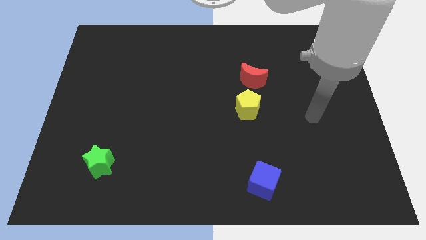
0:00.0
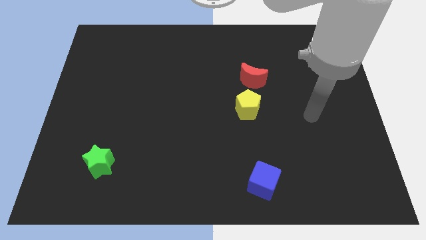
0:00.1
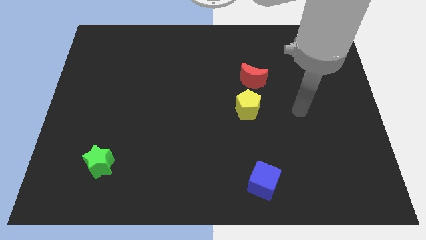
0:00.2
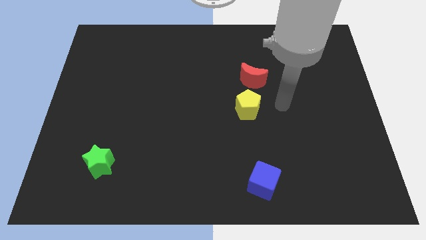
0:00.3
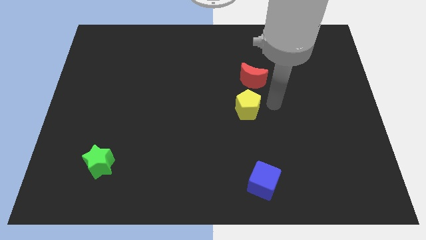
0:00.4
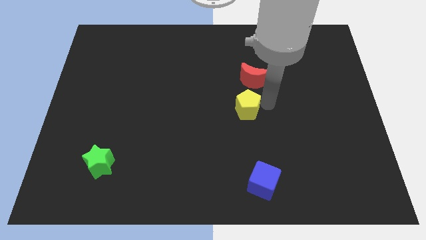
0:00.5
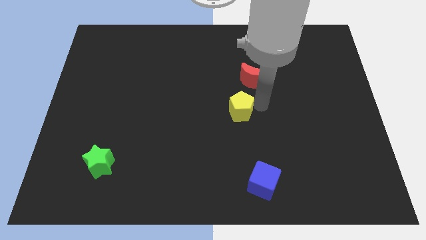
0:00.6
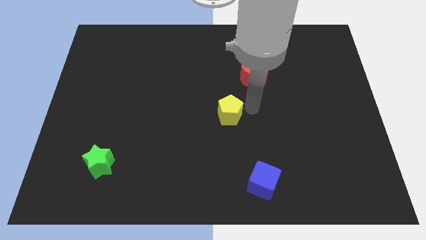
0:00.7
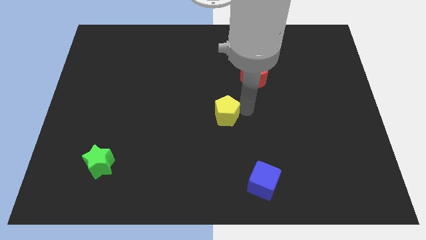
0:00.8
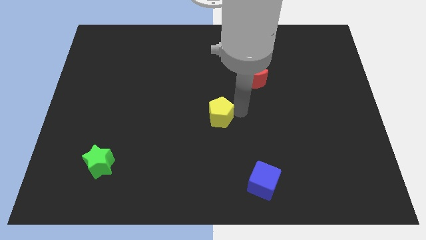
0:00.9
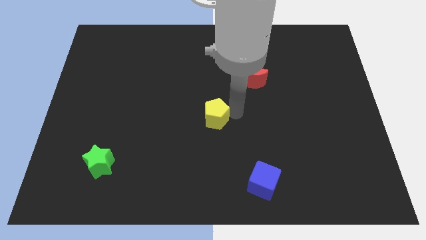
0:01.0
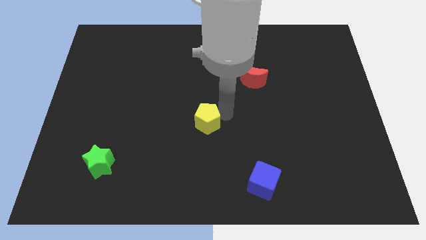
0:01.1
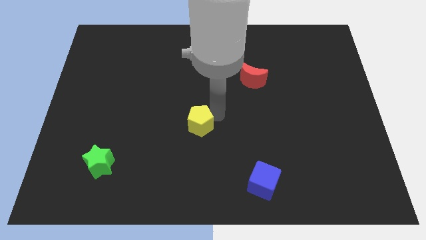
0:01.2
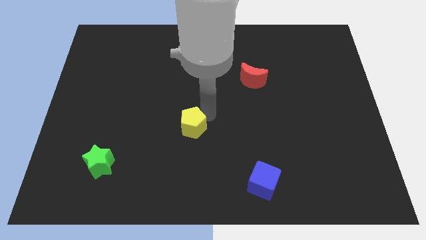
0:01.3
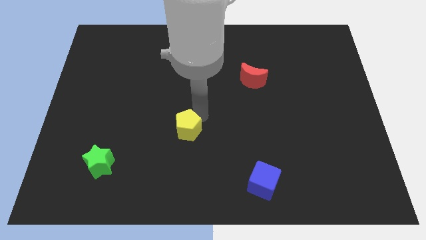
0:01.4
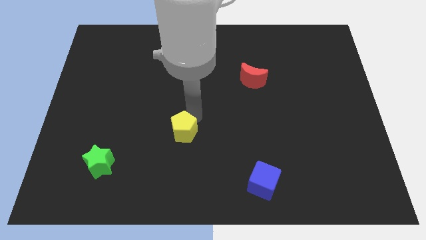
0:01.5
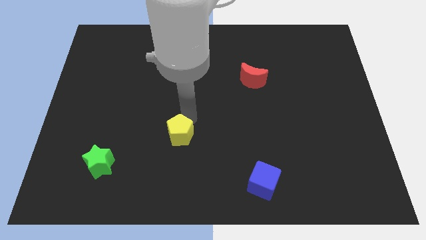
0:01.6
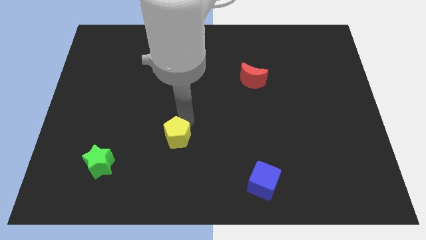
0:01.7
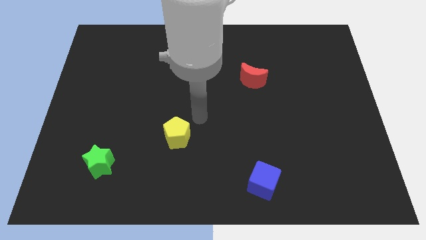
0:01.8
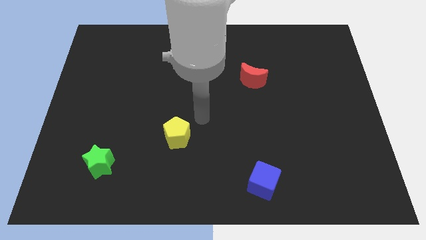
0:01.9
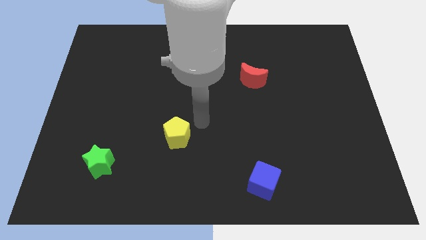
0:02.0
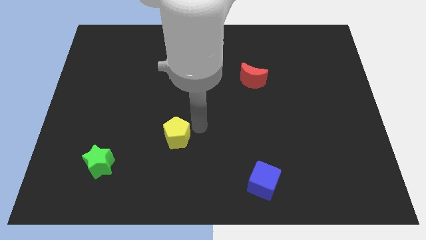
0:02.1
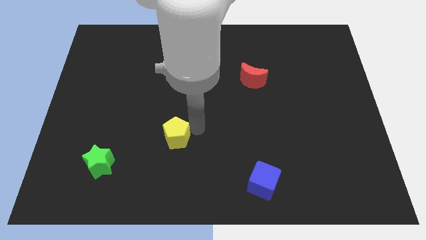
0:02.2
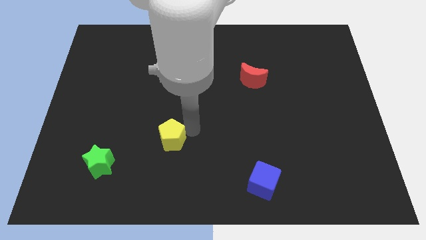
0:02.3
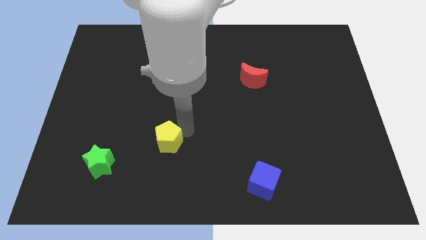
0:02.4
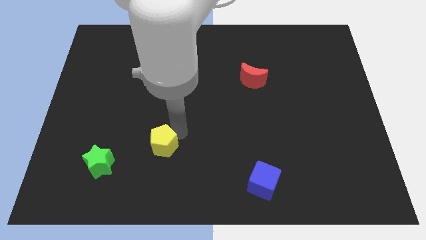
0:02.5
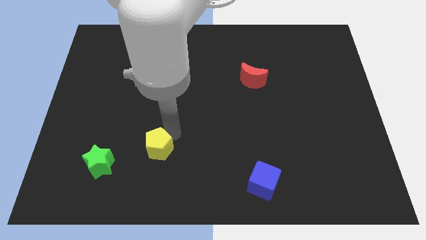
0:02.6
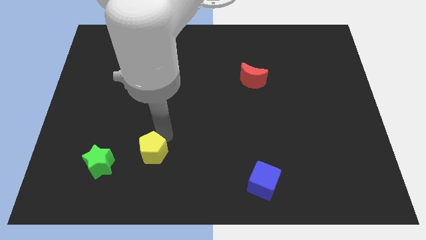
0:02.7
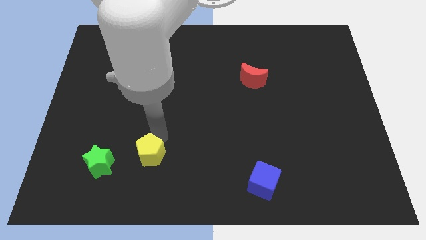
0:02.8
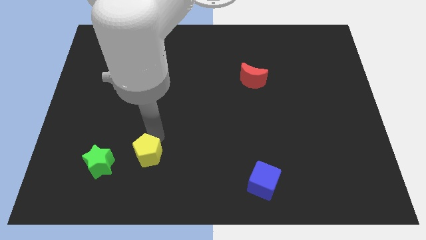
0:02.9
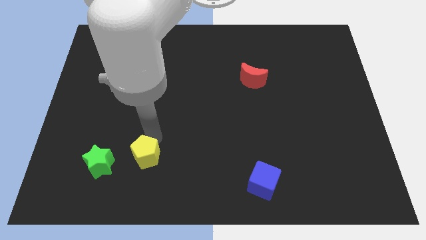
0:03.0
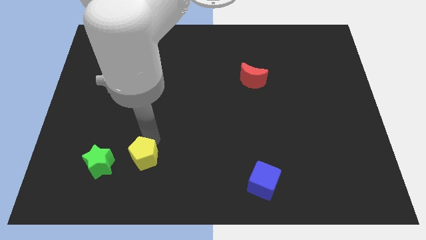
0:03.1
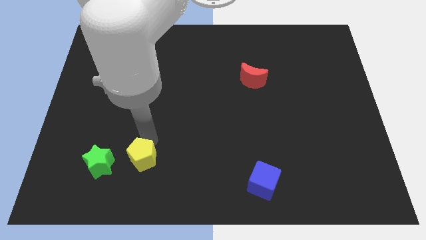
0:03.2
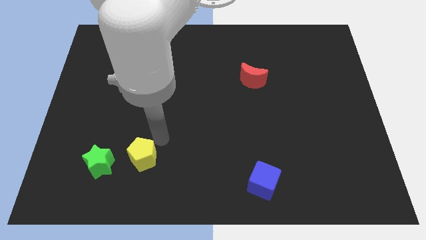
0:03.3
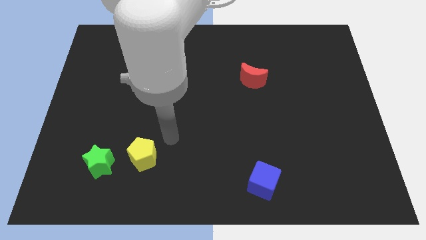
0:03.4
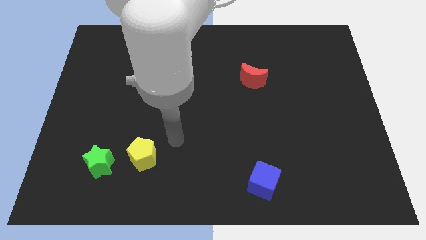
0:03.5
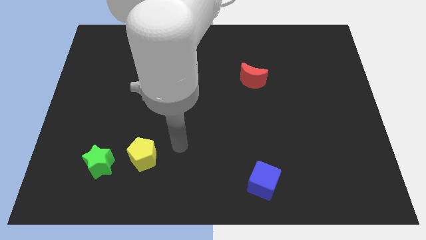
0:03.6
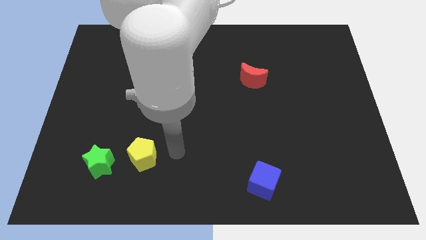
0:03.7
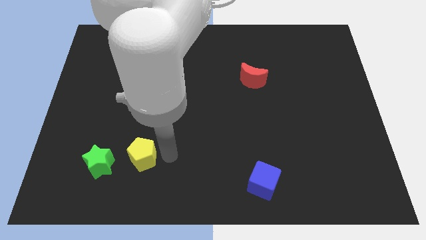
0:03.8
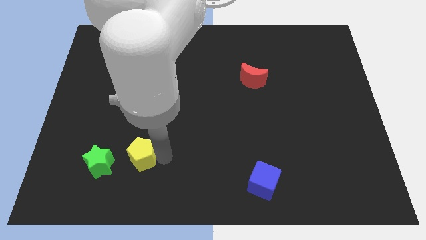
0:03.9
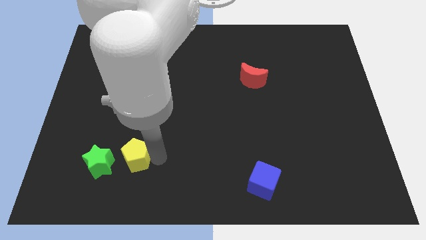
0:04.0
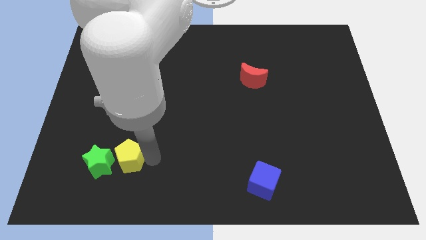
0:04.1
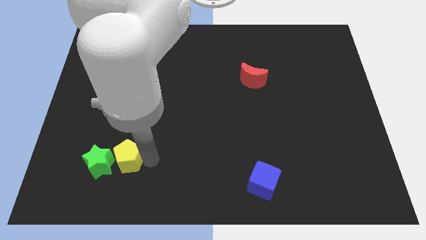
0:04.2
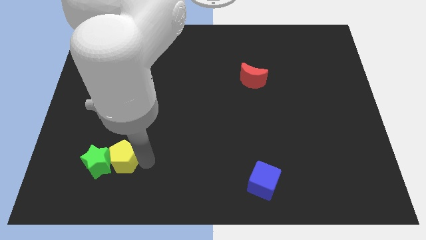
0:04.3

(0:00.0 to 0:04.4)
push the pentagon to the star

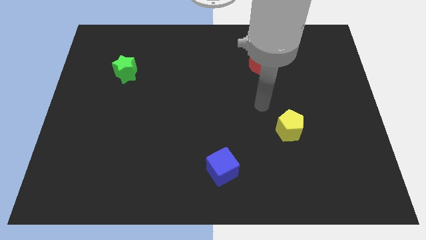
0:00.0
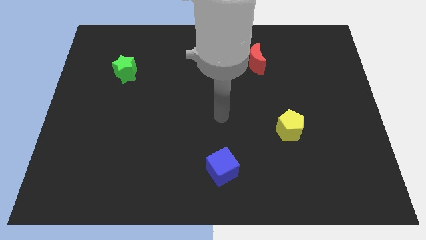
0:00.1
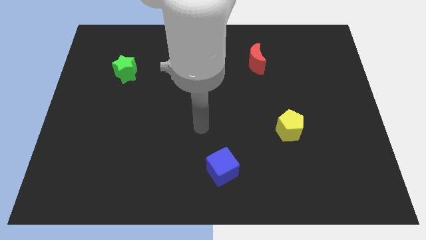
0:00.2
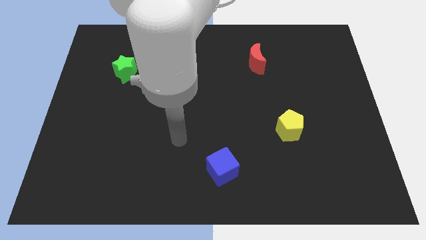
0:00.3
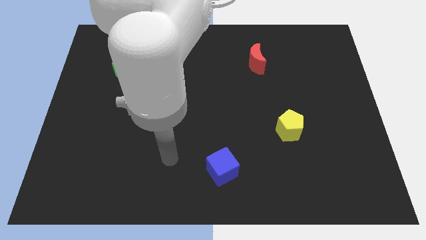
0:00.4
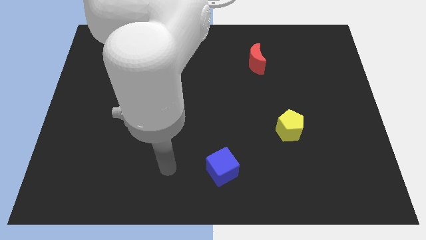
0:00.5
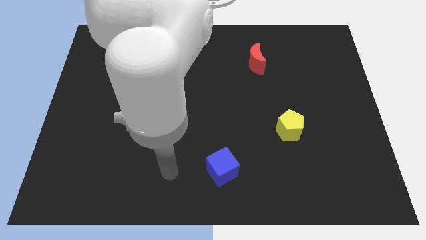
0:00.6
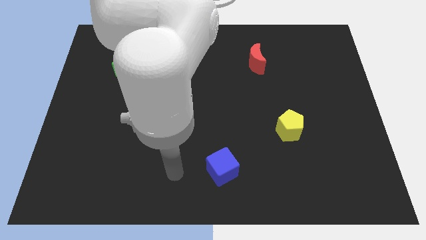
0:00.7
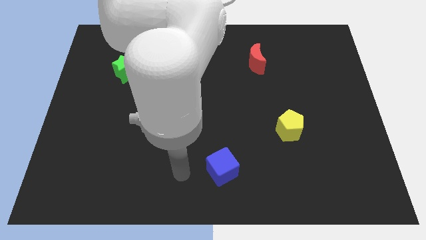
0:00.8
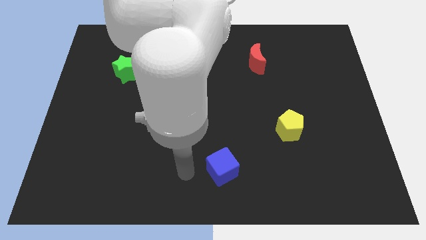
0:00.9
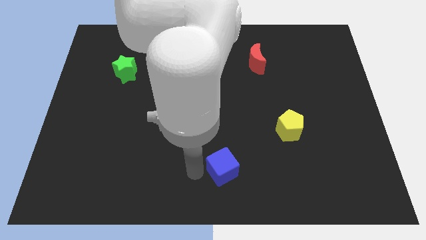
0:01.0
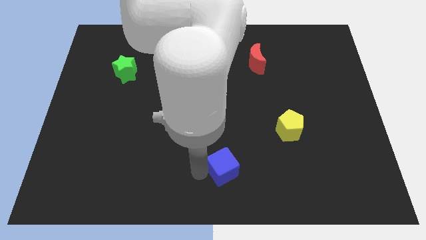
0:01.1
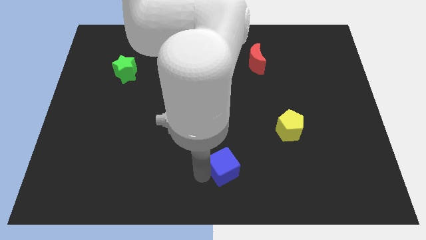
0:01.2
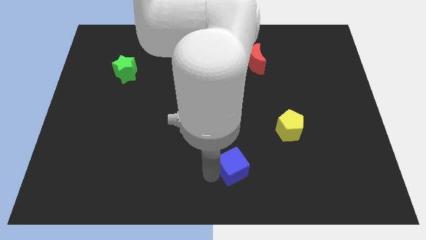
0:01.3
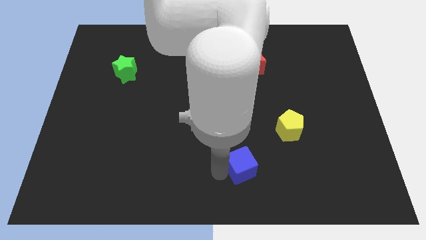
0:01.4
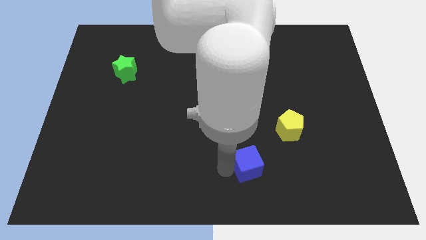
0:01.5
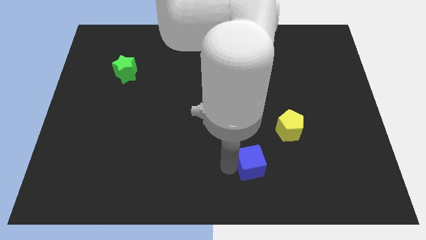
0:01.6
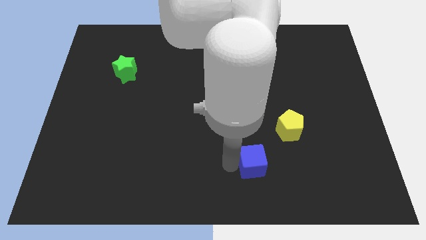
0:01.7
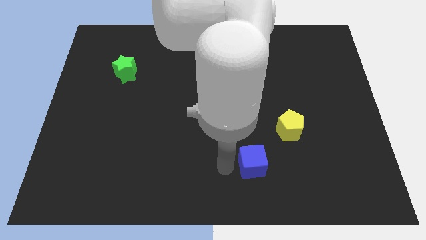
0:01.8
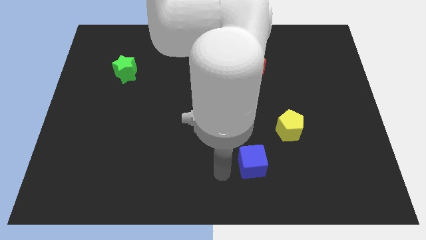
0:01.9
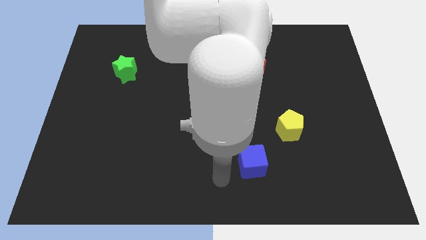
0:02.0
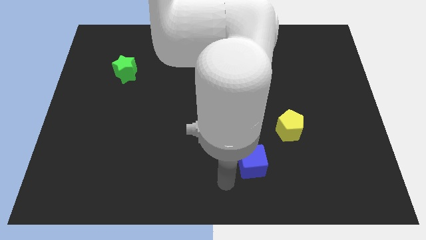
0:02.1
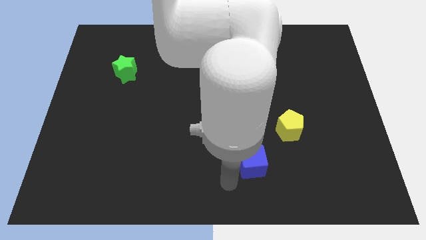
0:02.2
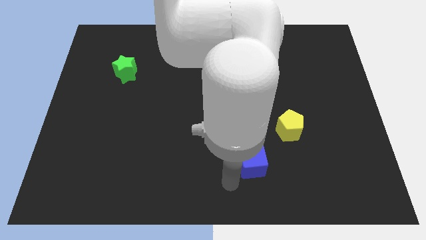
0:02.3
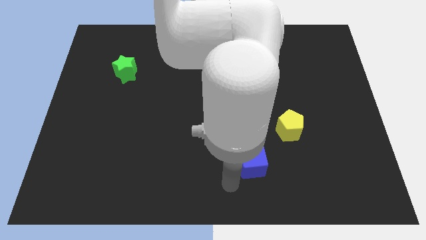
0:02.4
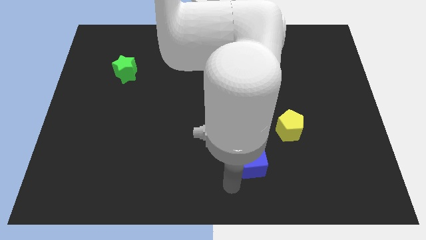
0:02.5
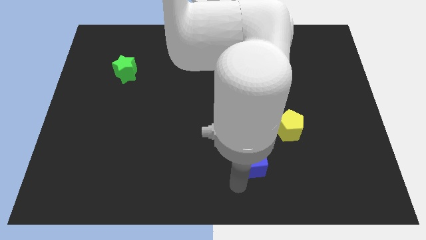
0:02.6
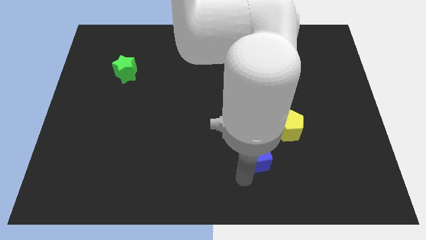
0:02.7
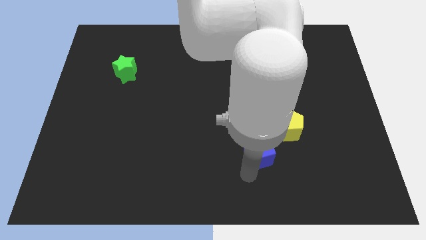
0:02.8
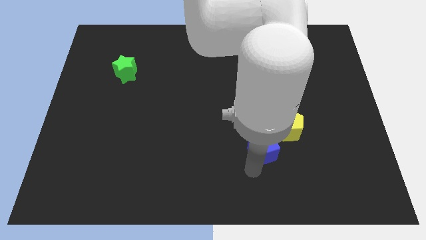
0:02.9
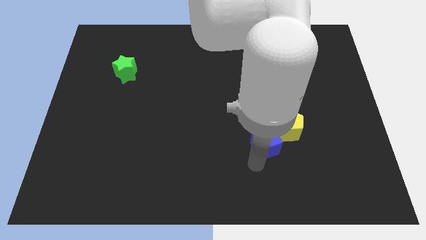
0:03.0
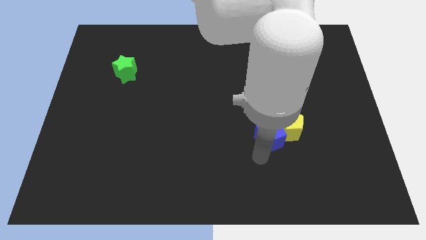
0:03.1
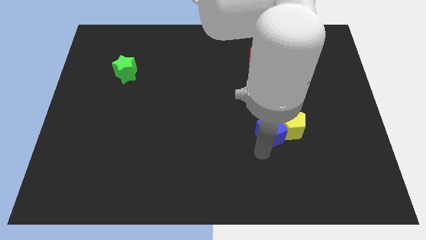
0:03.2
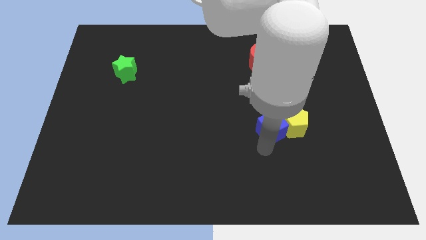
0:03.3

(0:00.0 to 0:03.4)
push the blue block close to the yellow block
